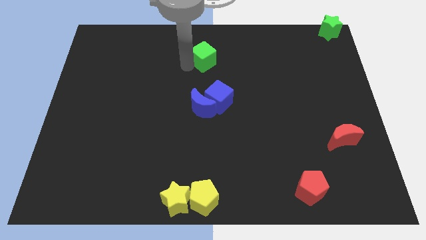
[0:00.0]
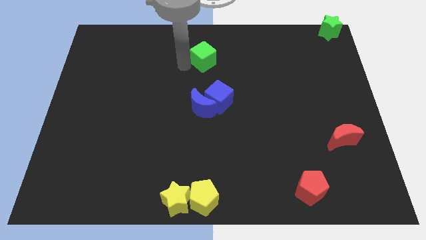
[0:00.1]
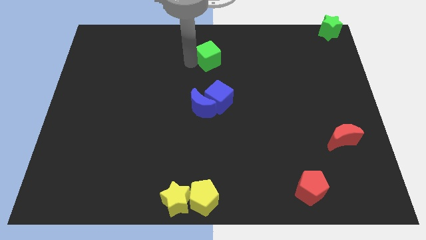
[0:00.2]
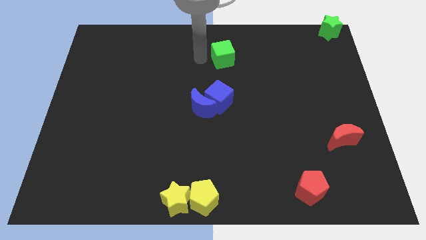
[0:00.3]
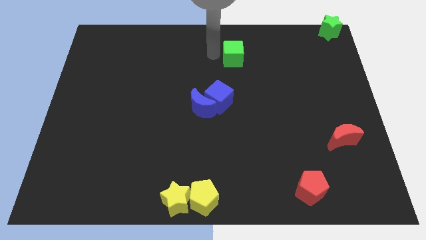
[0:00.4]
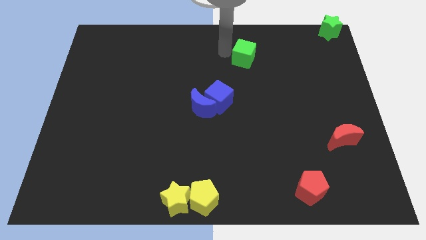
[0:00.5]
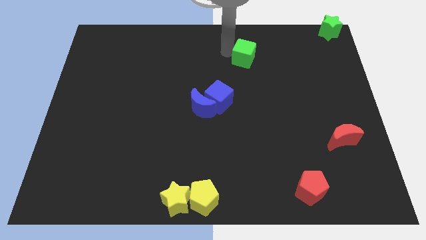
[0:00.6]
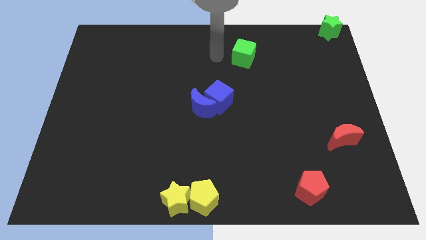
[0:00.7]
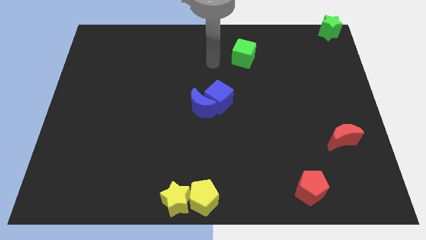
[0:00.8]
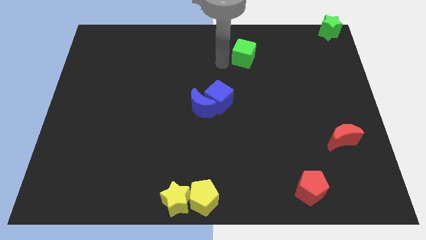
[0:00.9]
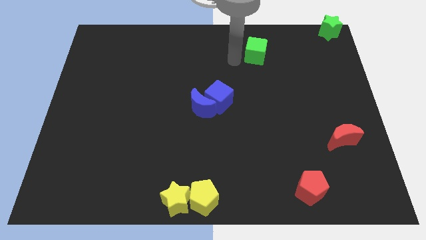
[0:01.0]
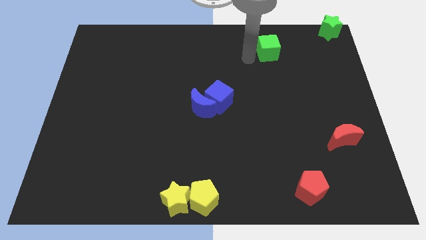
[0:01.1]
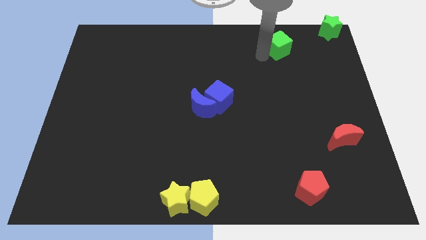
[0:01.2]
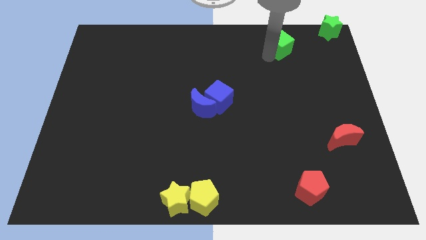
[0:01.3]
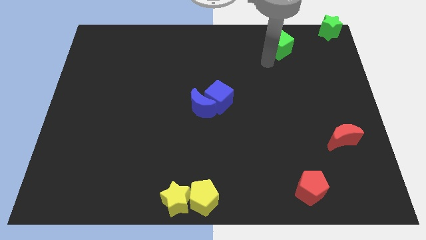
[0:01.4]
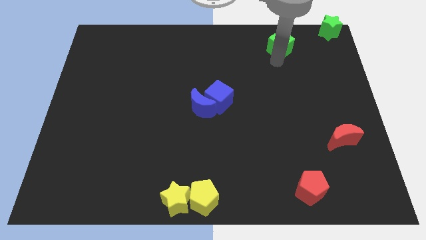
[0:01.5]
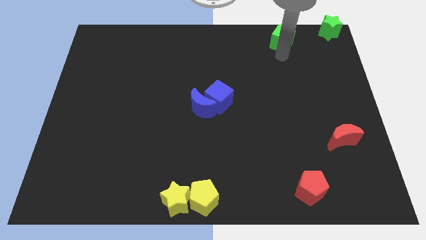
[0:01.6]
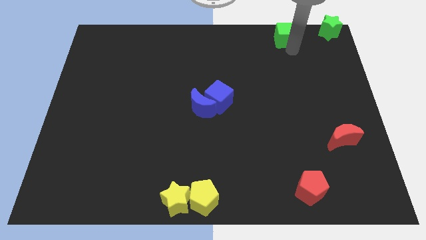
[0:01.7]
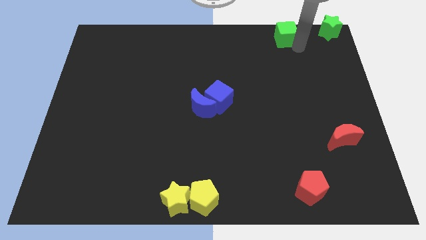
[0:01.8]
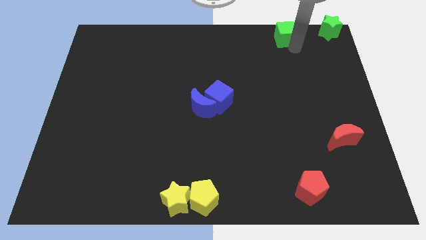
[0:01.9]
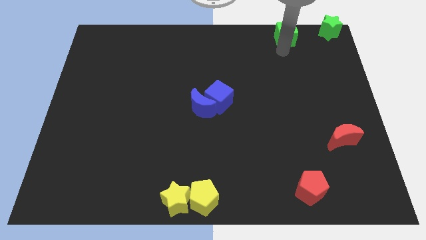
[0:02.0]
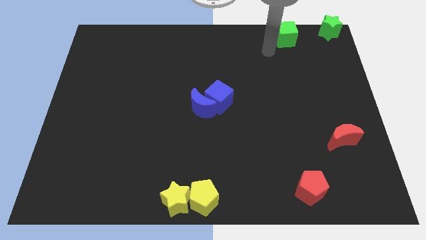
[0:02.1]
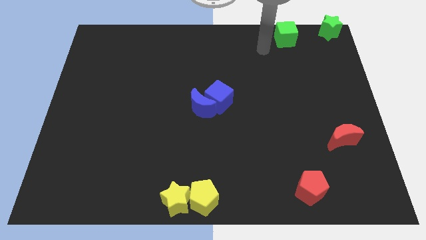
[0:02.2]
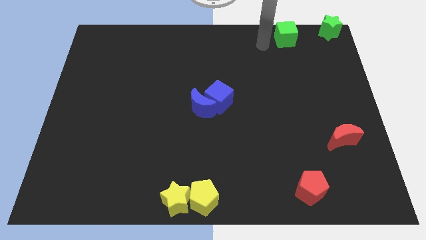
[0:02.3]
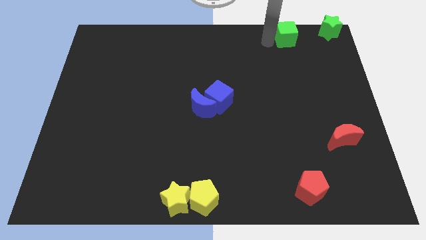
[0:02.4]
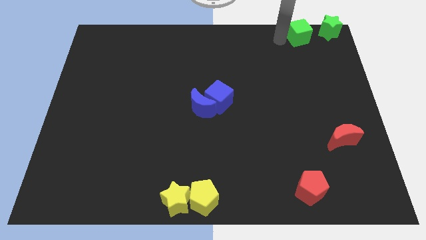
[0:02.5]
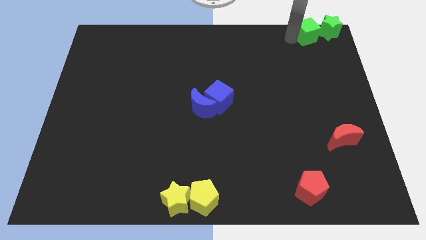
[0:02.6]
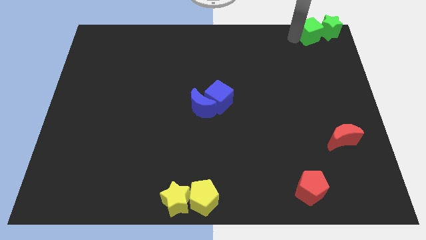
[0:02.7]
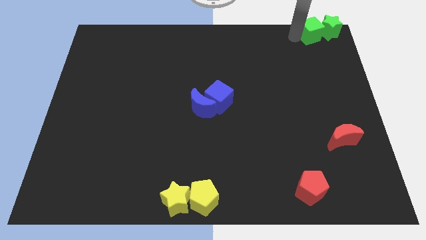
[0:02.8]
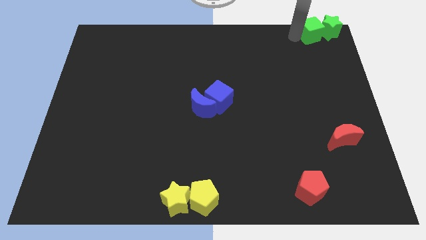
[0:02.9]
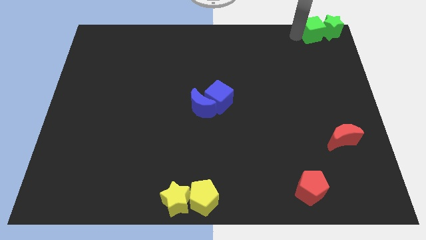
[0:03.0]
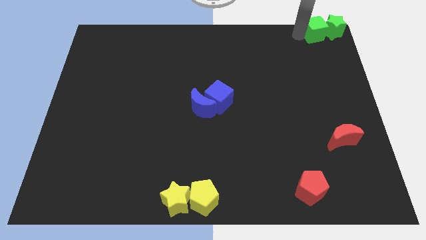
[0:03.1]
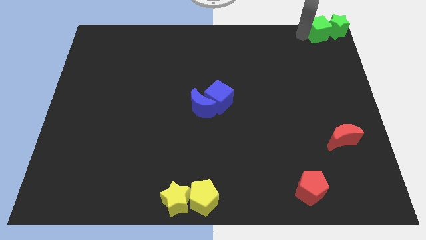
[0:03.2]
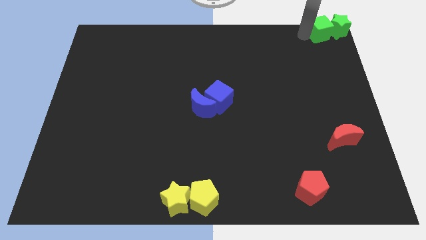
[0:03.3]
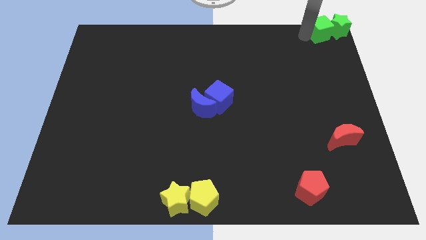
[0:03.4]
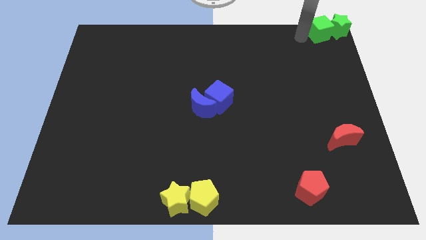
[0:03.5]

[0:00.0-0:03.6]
move the green cube left to the green star

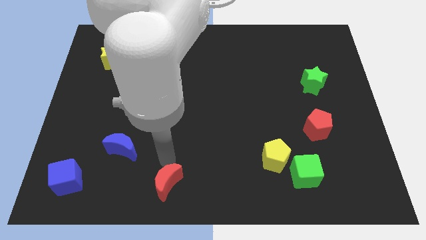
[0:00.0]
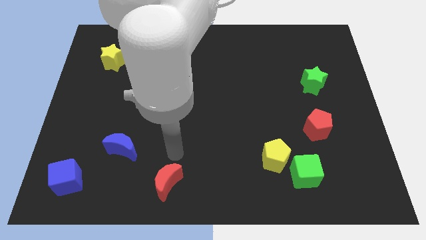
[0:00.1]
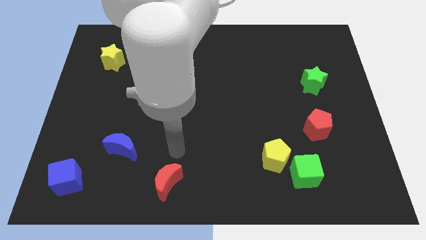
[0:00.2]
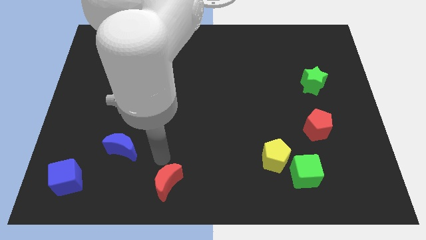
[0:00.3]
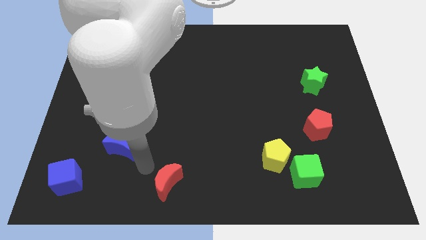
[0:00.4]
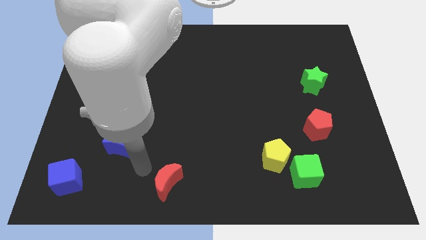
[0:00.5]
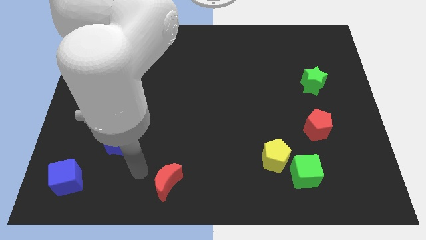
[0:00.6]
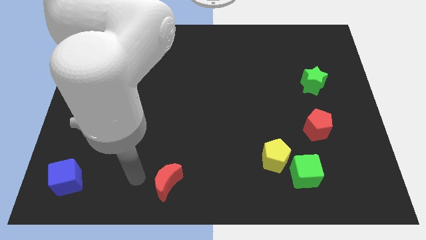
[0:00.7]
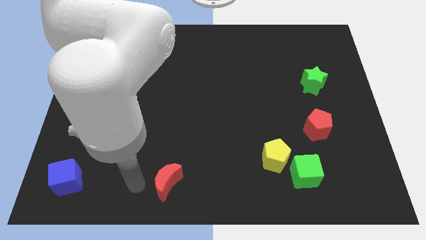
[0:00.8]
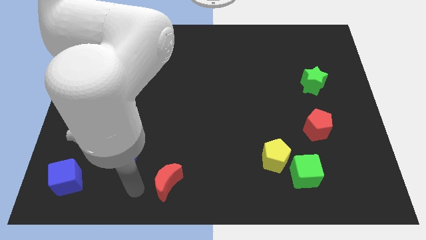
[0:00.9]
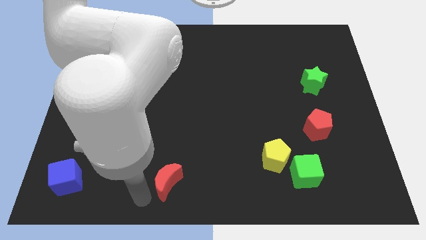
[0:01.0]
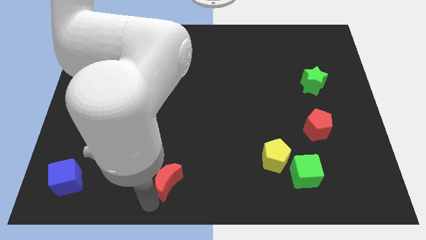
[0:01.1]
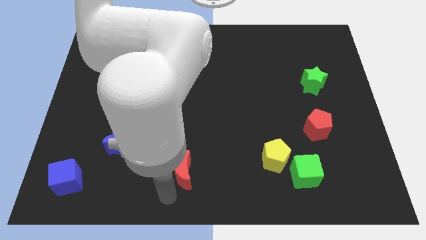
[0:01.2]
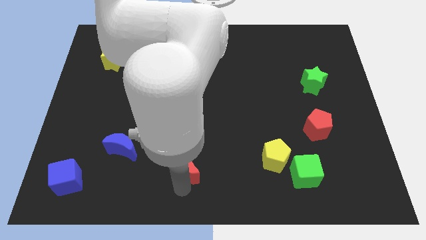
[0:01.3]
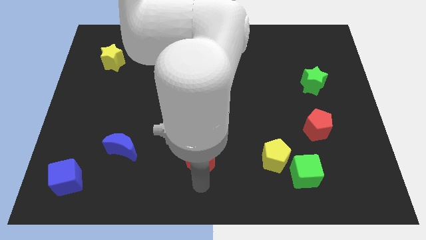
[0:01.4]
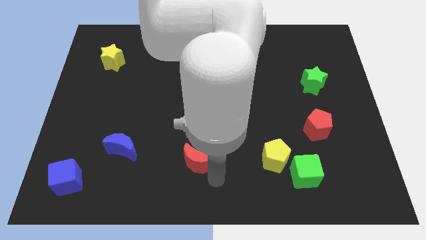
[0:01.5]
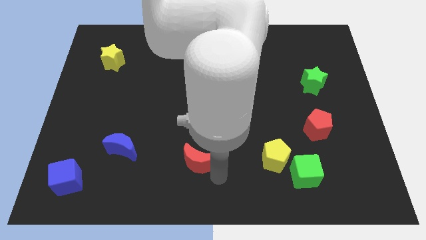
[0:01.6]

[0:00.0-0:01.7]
turn red moon towards top

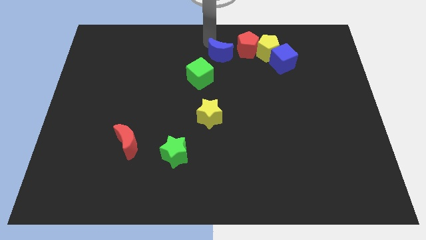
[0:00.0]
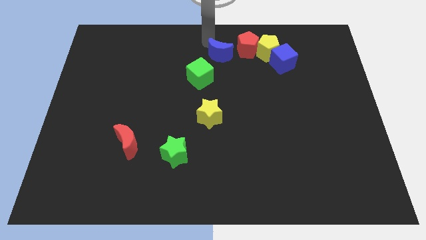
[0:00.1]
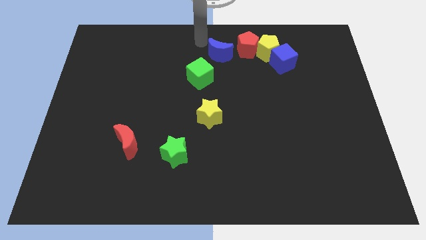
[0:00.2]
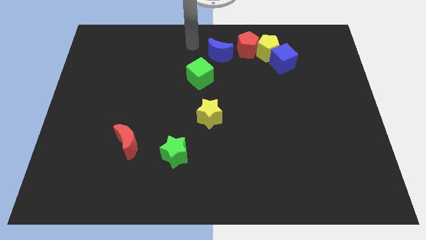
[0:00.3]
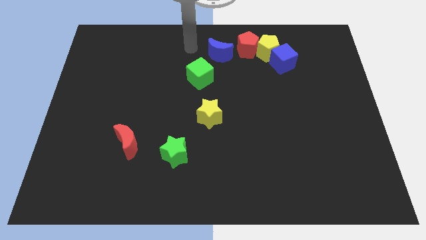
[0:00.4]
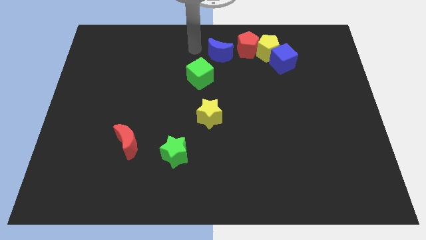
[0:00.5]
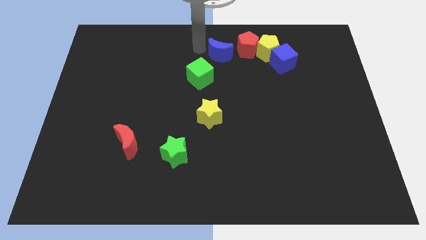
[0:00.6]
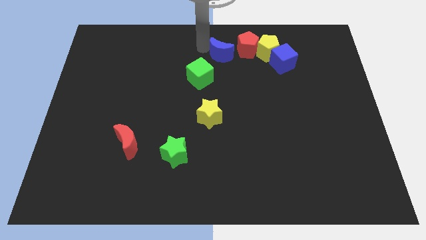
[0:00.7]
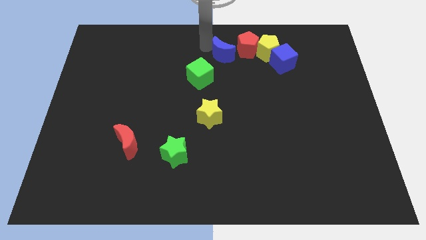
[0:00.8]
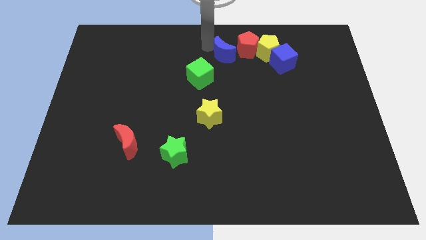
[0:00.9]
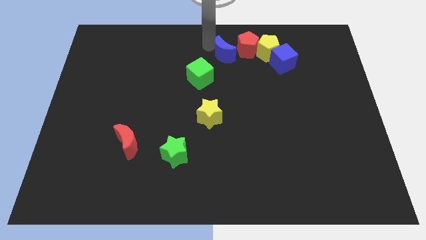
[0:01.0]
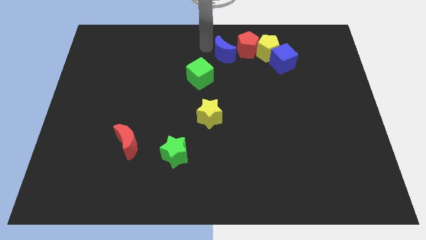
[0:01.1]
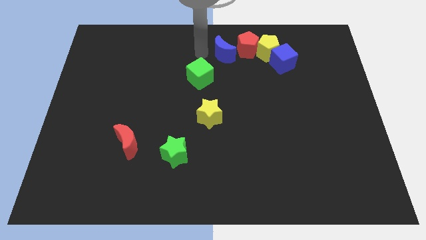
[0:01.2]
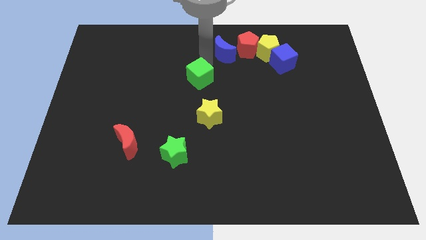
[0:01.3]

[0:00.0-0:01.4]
move the blue moon slightly to the right

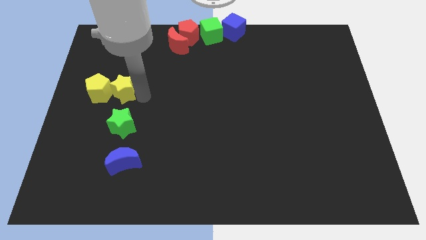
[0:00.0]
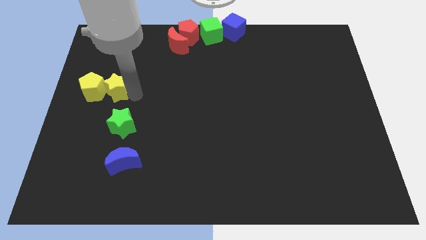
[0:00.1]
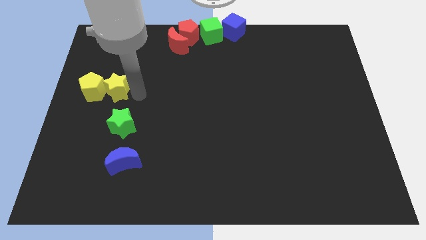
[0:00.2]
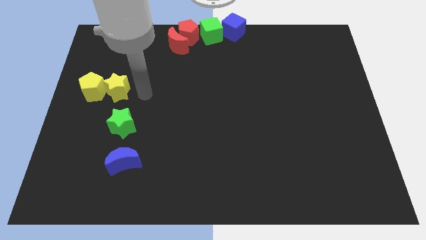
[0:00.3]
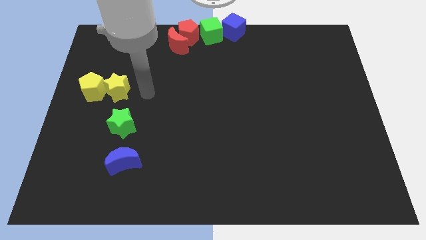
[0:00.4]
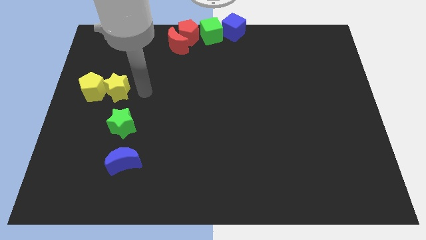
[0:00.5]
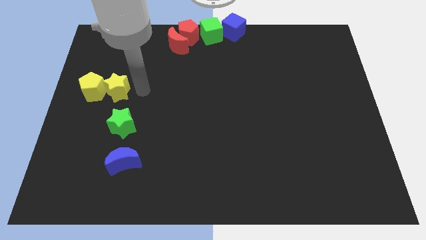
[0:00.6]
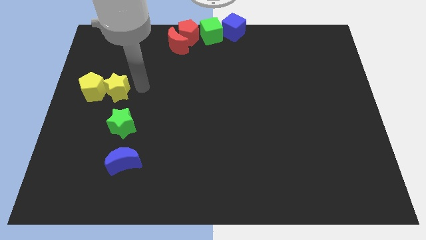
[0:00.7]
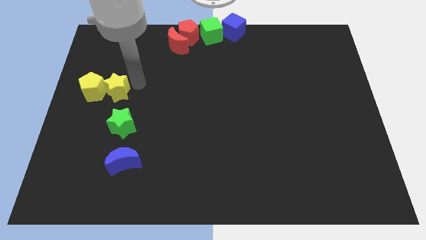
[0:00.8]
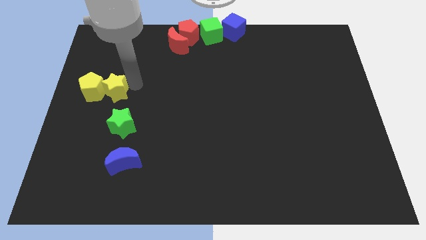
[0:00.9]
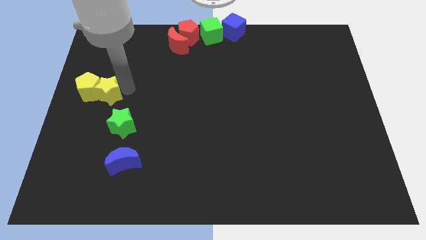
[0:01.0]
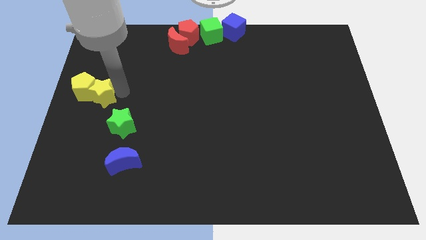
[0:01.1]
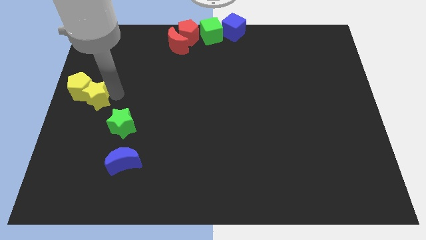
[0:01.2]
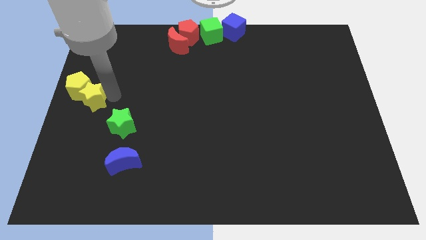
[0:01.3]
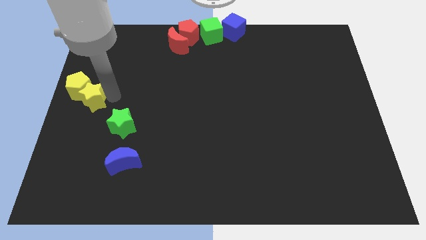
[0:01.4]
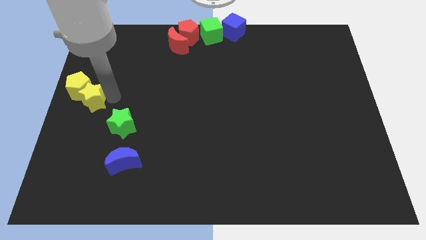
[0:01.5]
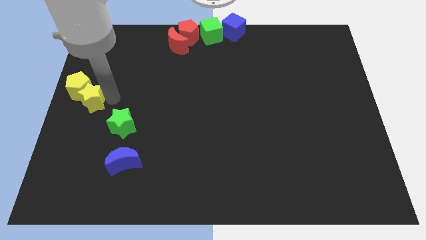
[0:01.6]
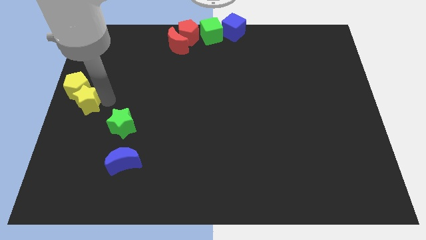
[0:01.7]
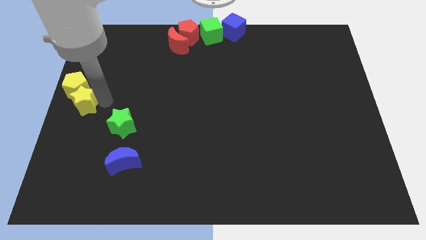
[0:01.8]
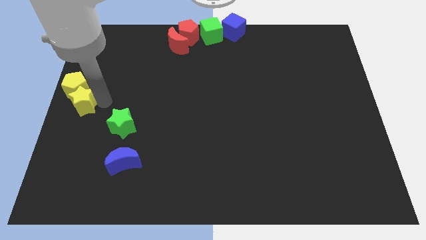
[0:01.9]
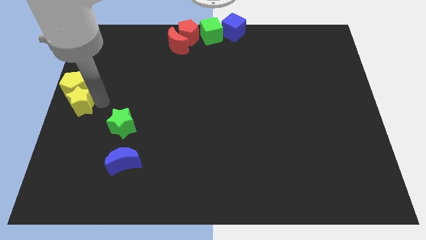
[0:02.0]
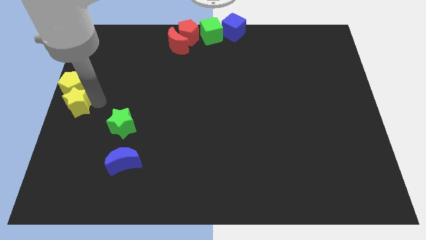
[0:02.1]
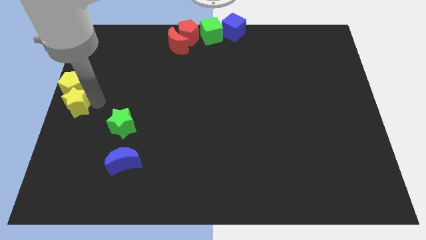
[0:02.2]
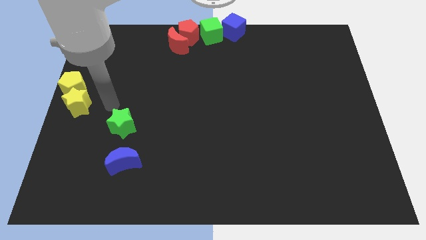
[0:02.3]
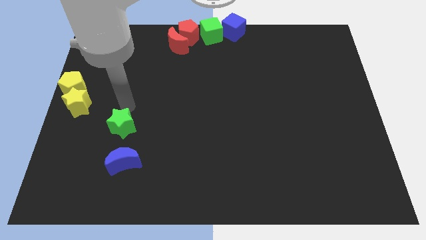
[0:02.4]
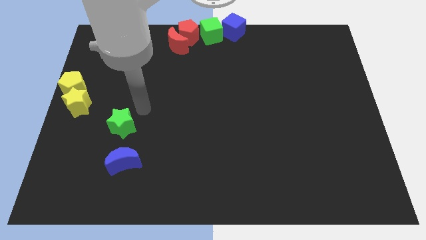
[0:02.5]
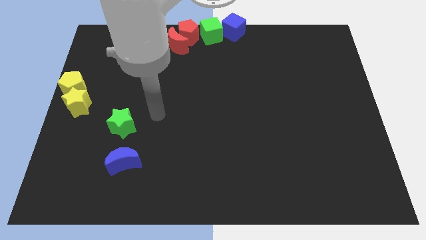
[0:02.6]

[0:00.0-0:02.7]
place the yellow star below the yellow pentagon
